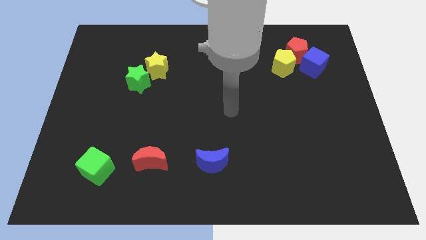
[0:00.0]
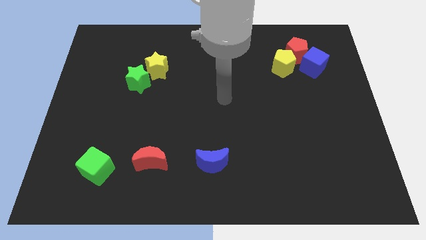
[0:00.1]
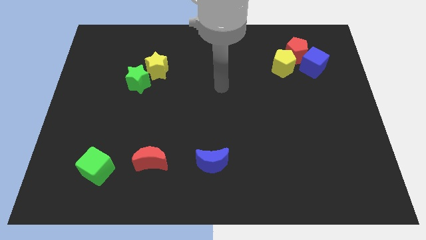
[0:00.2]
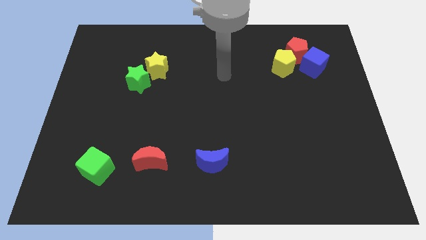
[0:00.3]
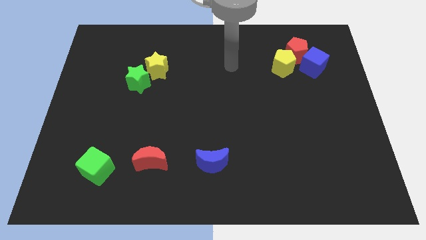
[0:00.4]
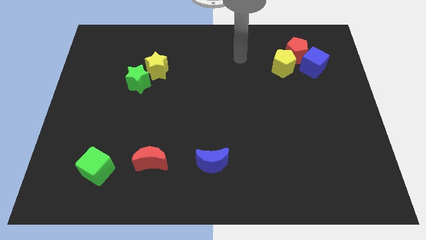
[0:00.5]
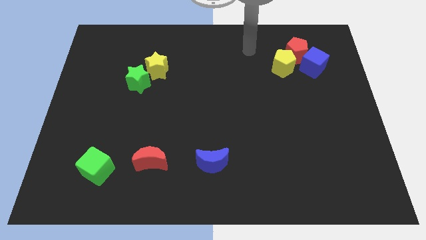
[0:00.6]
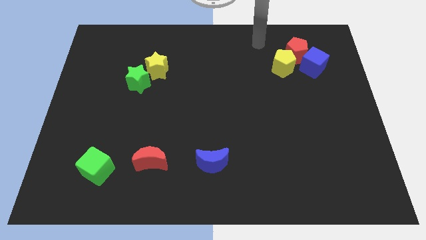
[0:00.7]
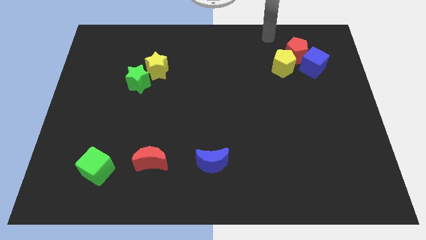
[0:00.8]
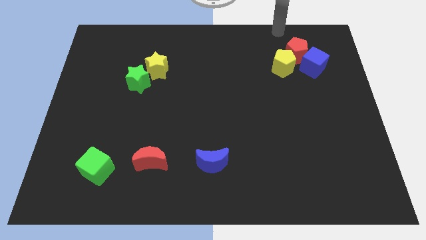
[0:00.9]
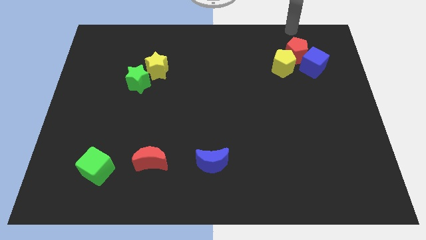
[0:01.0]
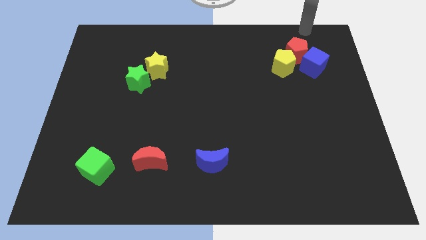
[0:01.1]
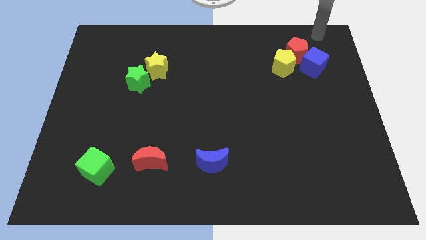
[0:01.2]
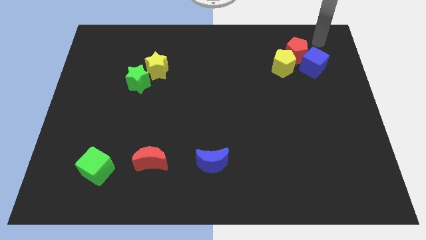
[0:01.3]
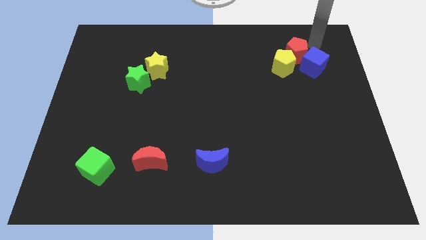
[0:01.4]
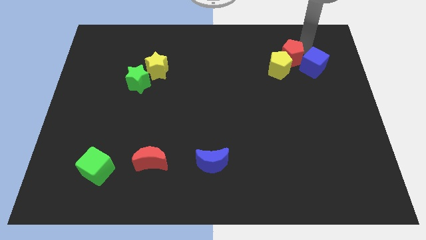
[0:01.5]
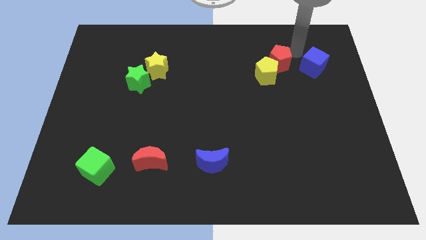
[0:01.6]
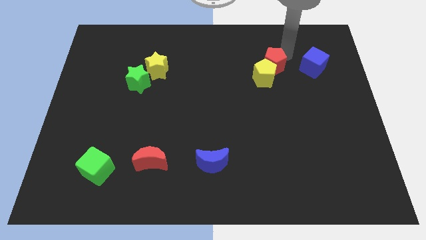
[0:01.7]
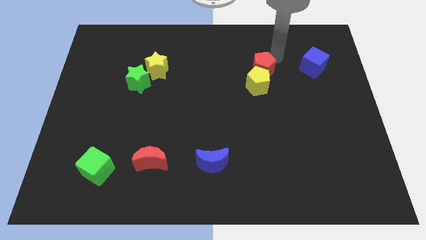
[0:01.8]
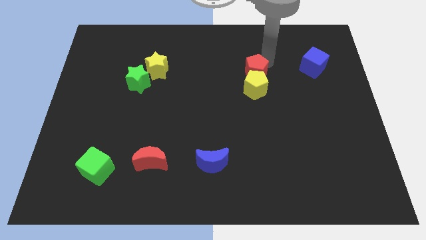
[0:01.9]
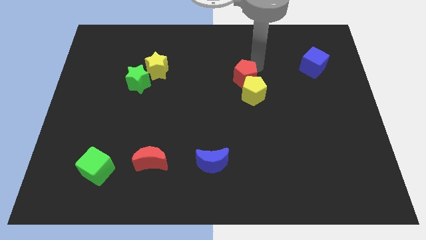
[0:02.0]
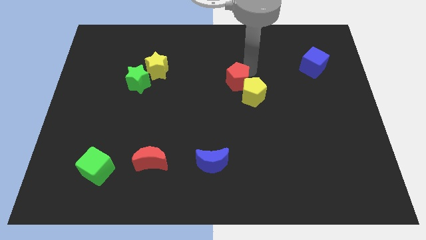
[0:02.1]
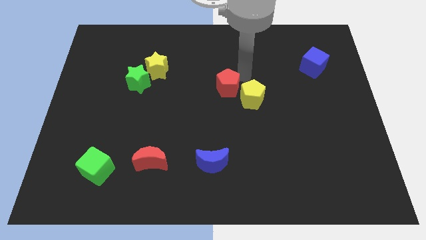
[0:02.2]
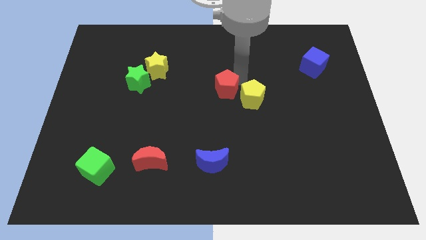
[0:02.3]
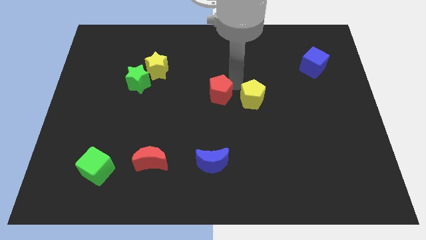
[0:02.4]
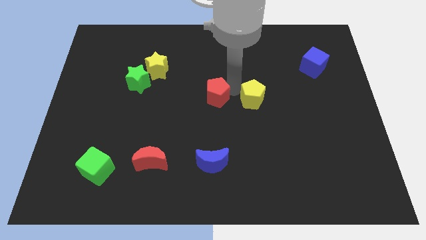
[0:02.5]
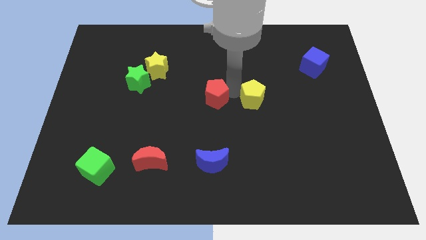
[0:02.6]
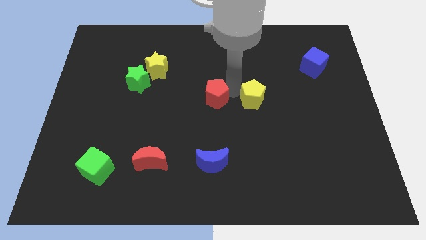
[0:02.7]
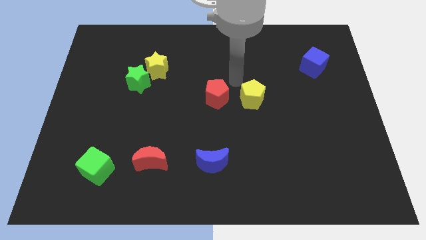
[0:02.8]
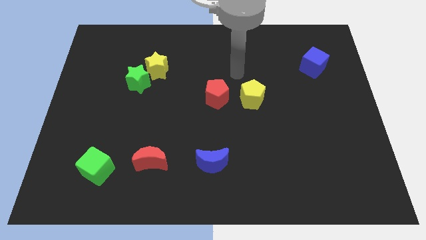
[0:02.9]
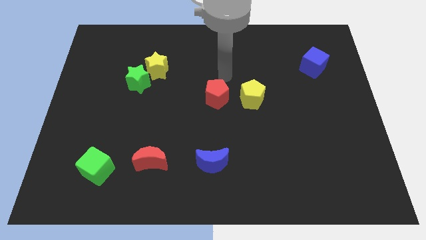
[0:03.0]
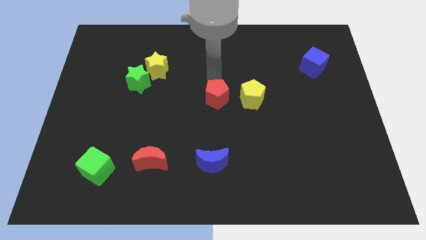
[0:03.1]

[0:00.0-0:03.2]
place the red pentagon left to the yellow pentagon

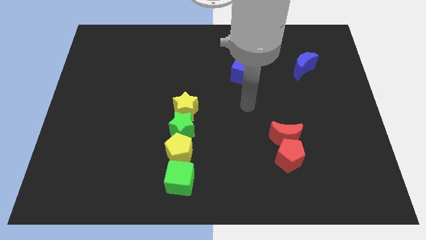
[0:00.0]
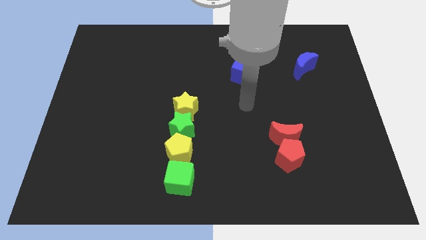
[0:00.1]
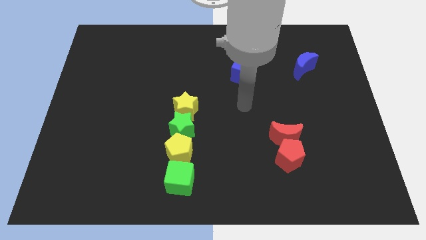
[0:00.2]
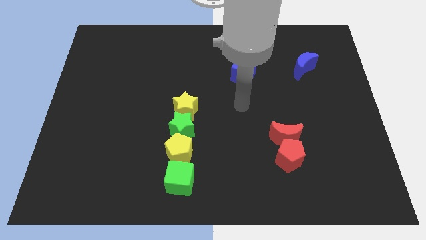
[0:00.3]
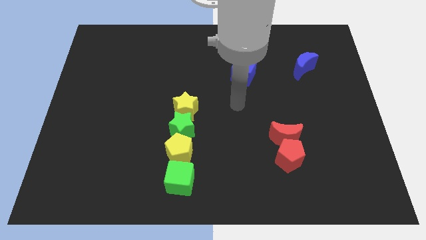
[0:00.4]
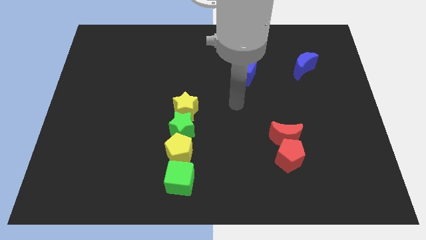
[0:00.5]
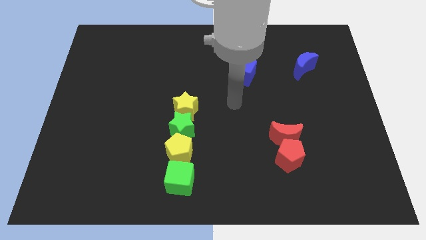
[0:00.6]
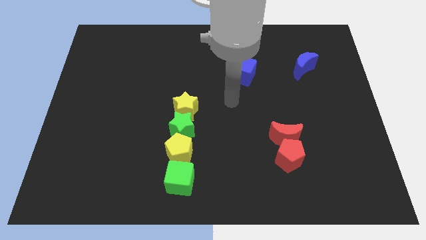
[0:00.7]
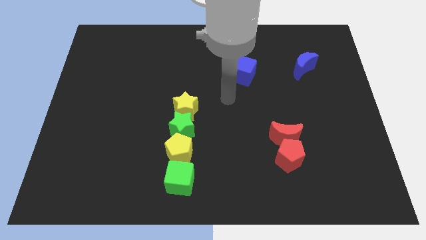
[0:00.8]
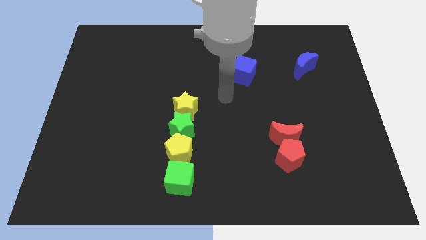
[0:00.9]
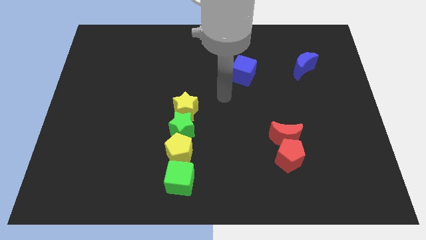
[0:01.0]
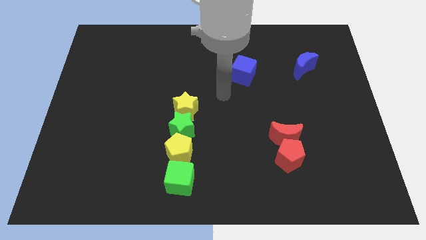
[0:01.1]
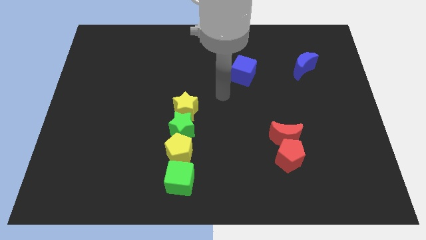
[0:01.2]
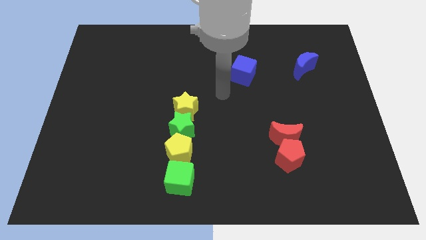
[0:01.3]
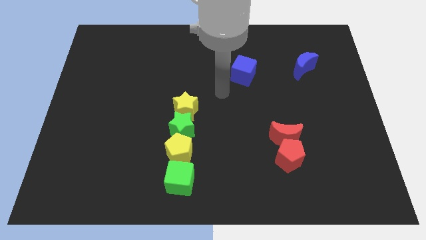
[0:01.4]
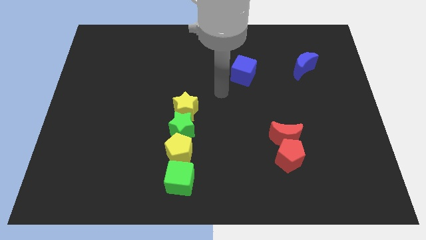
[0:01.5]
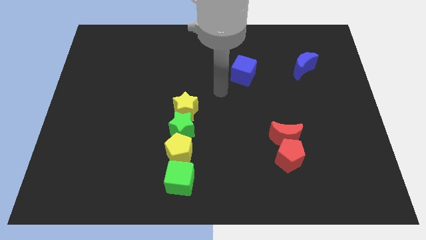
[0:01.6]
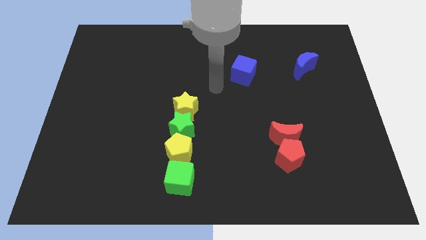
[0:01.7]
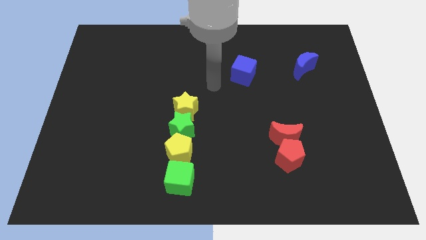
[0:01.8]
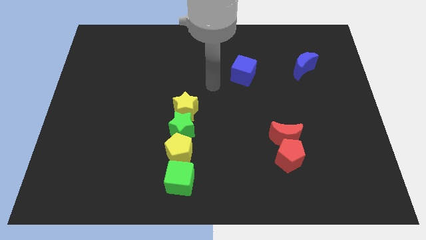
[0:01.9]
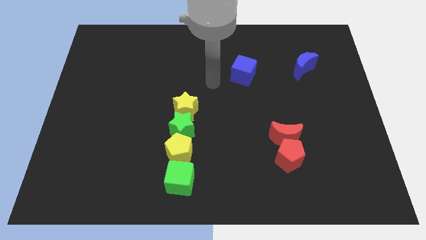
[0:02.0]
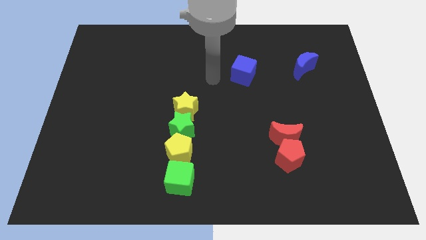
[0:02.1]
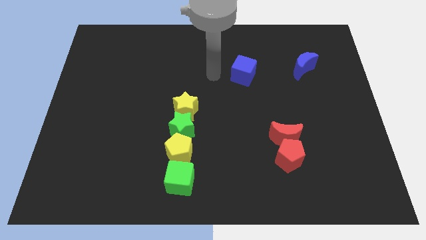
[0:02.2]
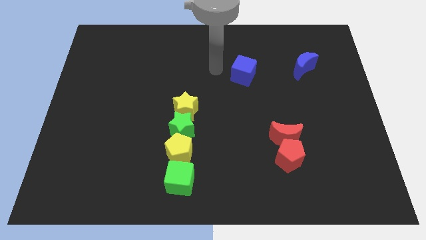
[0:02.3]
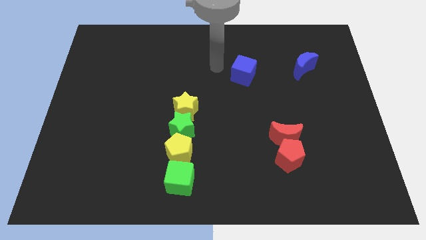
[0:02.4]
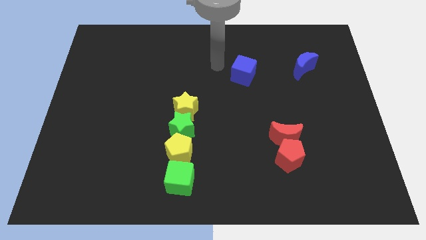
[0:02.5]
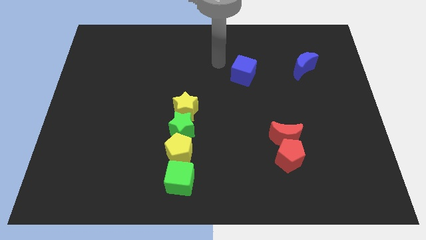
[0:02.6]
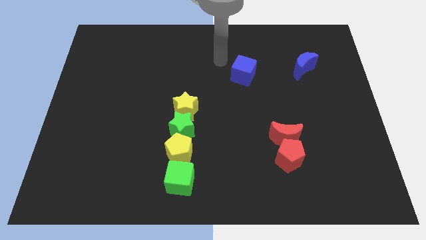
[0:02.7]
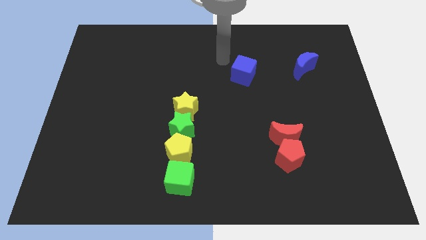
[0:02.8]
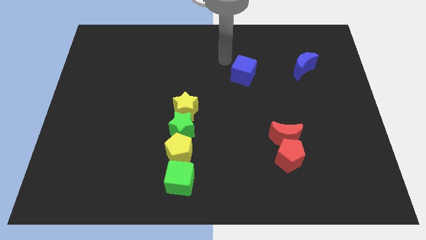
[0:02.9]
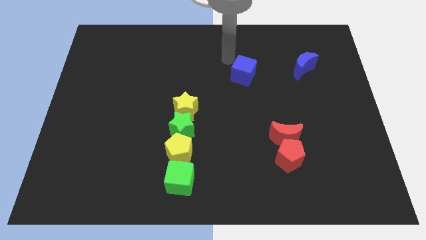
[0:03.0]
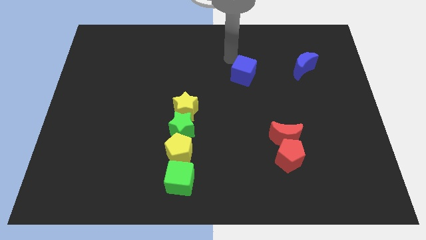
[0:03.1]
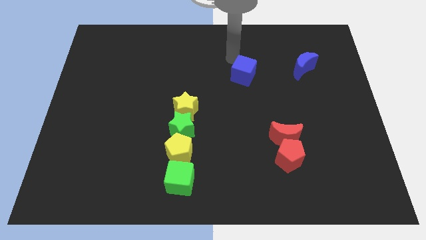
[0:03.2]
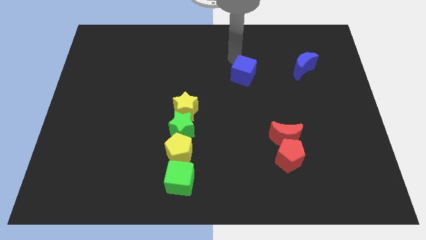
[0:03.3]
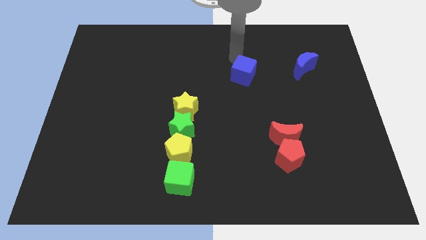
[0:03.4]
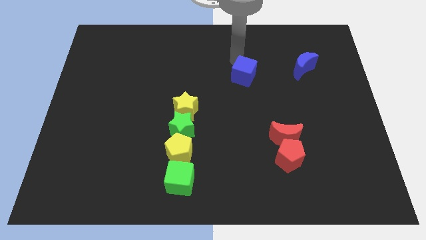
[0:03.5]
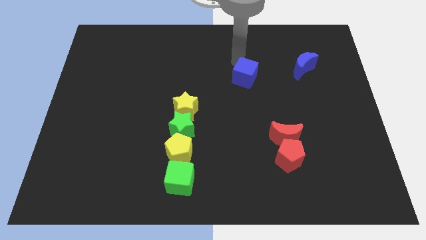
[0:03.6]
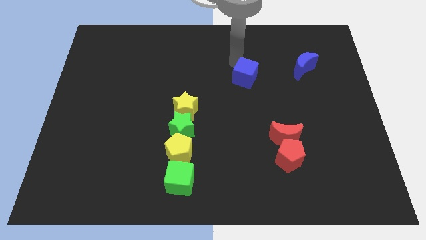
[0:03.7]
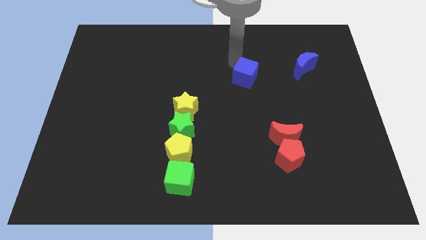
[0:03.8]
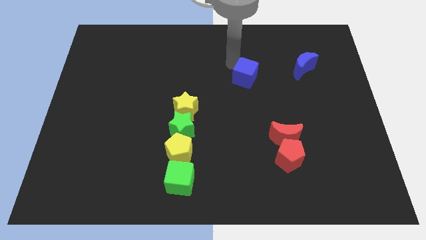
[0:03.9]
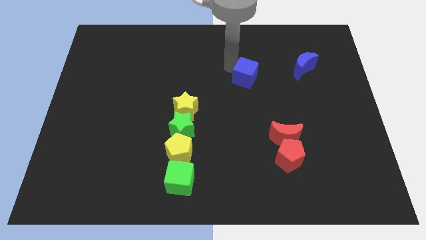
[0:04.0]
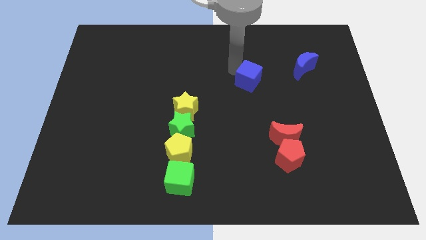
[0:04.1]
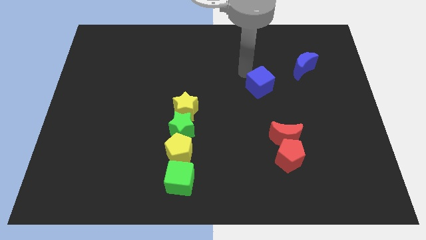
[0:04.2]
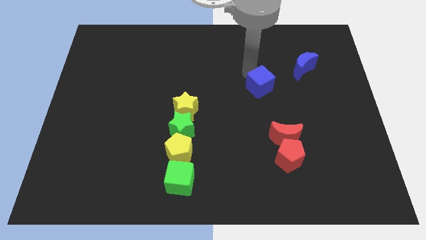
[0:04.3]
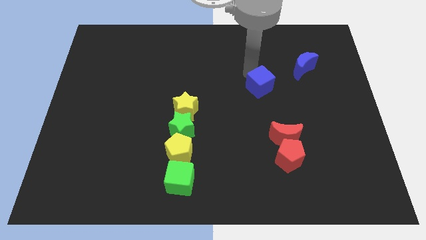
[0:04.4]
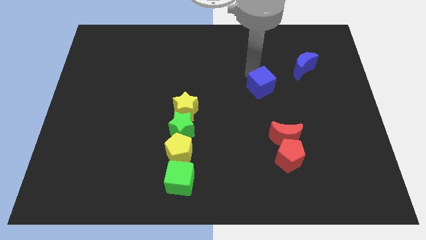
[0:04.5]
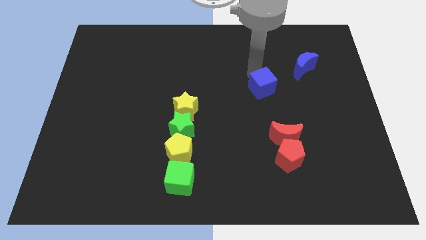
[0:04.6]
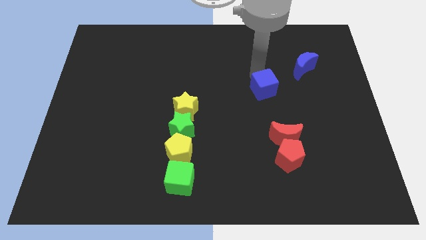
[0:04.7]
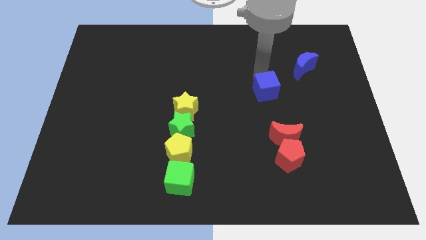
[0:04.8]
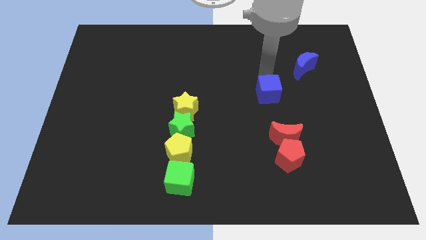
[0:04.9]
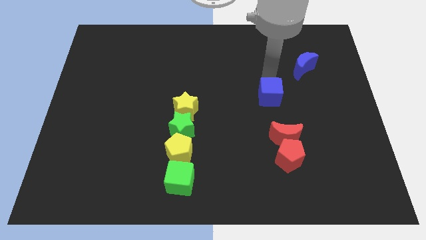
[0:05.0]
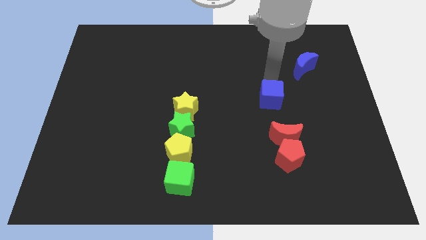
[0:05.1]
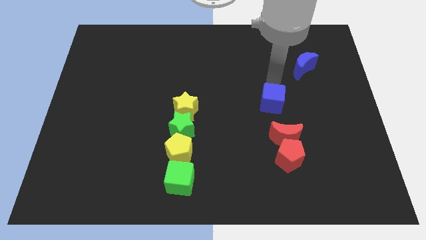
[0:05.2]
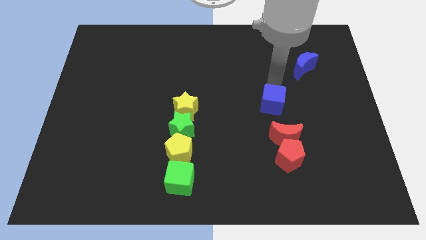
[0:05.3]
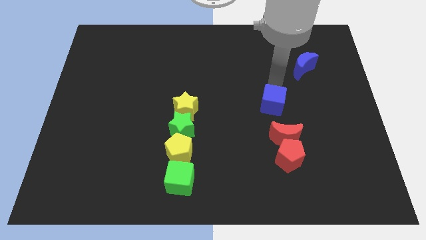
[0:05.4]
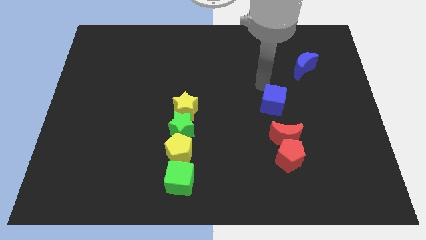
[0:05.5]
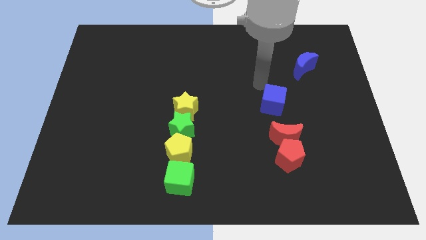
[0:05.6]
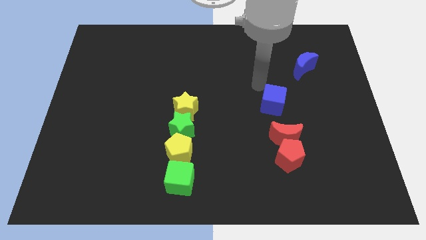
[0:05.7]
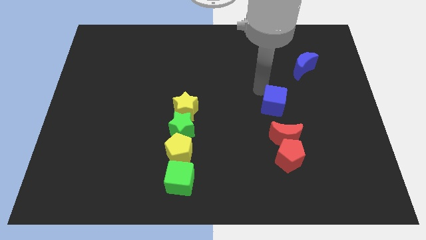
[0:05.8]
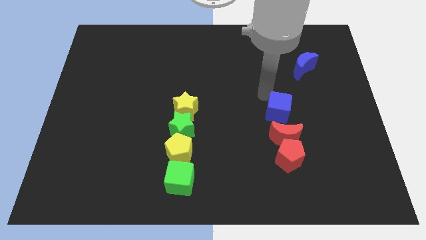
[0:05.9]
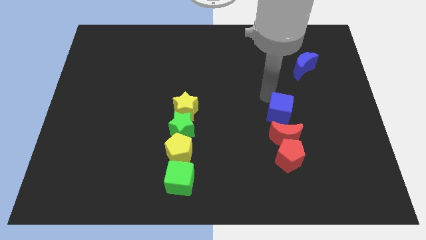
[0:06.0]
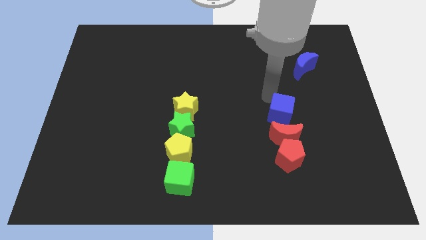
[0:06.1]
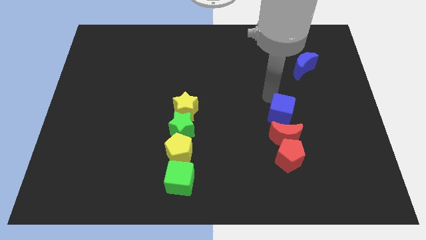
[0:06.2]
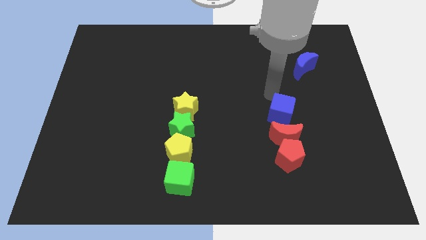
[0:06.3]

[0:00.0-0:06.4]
move the blue cube to the top of the red crescent
